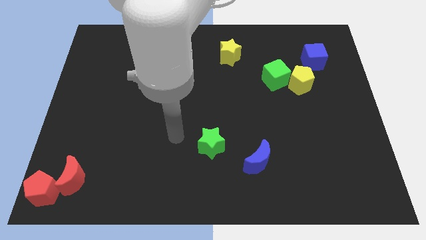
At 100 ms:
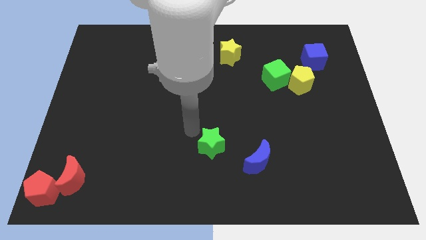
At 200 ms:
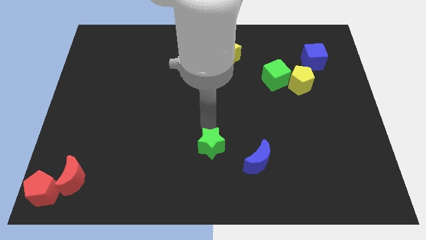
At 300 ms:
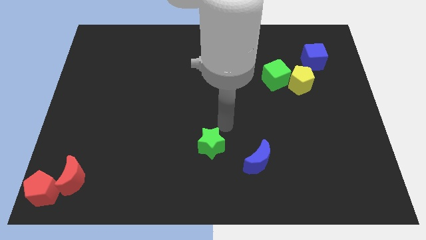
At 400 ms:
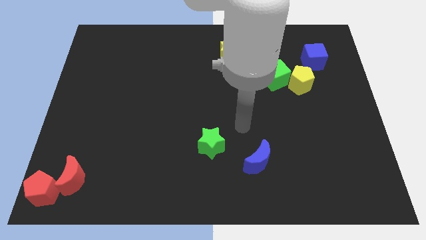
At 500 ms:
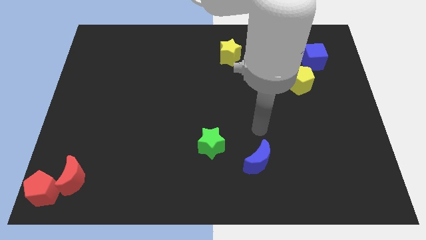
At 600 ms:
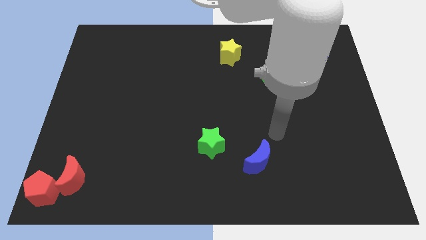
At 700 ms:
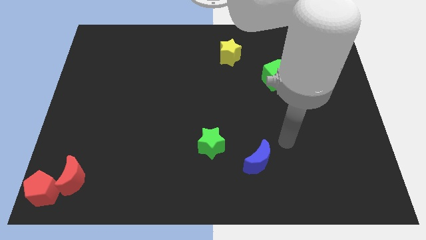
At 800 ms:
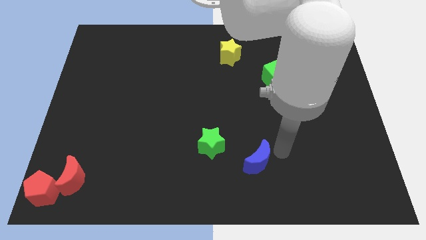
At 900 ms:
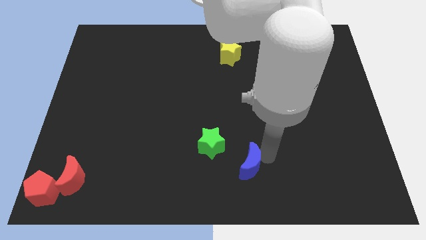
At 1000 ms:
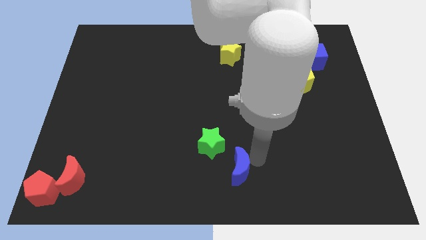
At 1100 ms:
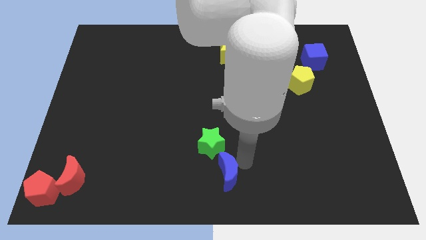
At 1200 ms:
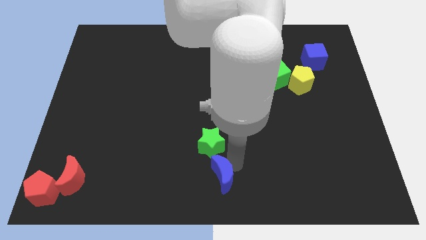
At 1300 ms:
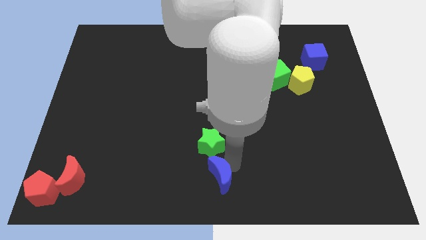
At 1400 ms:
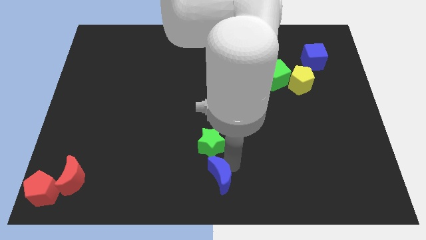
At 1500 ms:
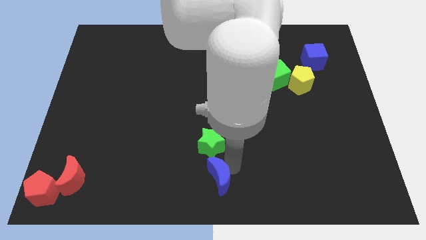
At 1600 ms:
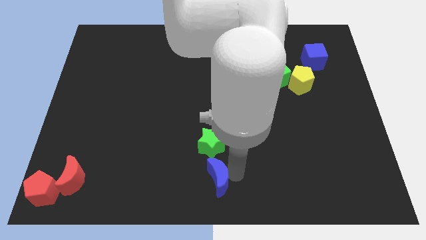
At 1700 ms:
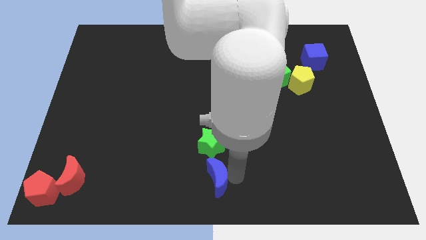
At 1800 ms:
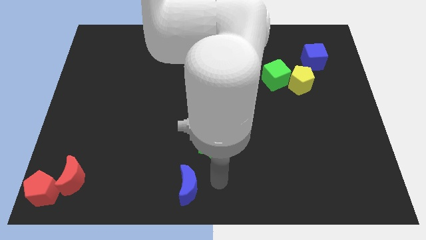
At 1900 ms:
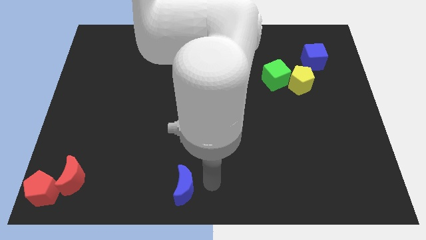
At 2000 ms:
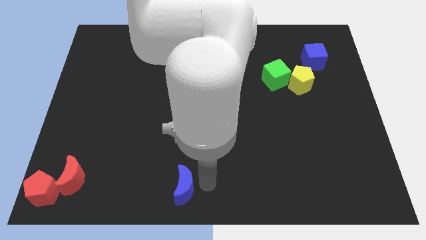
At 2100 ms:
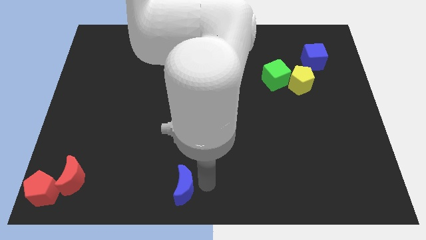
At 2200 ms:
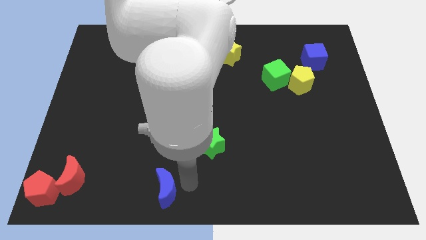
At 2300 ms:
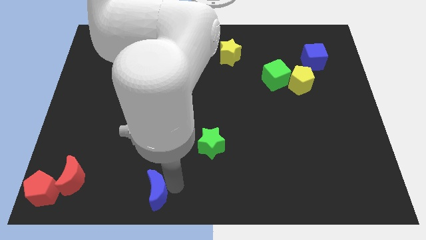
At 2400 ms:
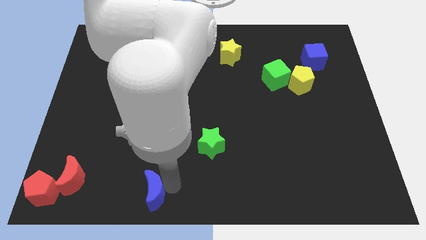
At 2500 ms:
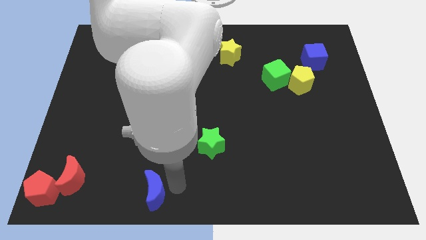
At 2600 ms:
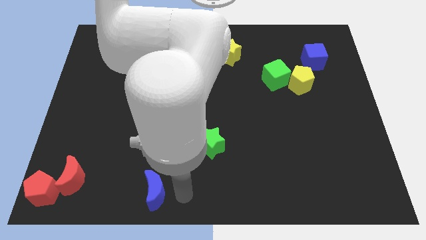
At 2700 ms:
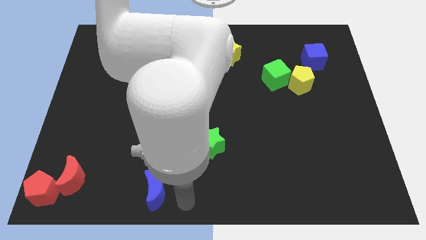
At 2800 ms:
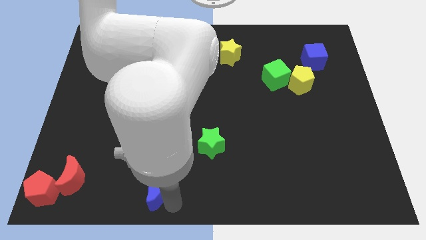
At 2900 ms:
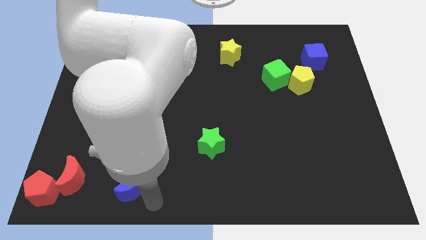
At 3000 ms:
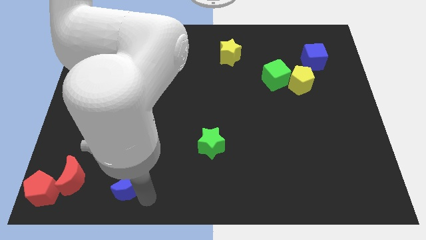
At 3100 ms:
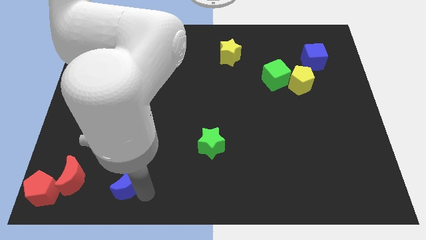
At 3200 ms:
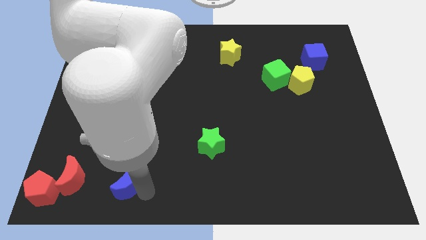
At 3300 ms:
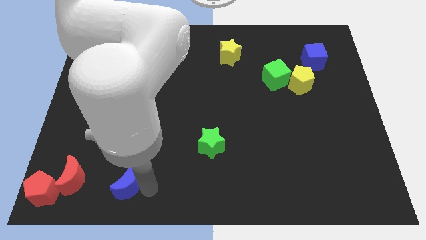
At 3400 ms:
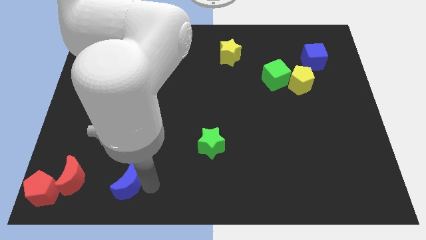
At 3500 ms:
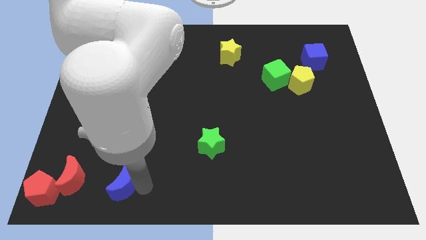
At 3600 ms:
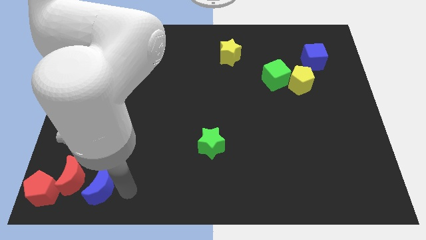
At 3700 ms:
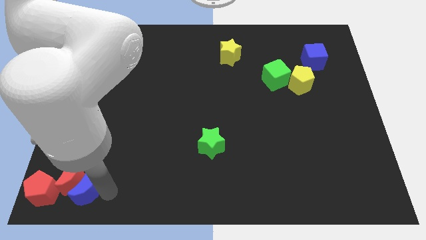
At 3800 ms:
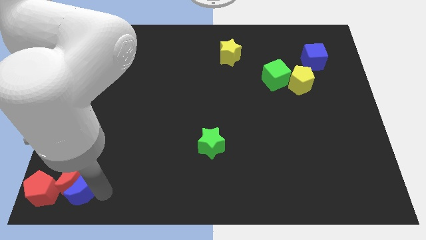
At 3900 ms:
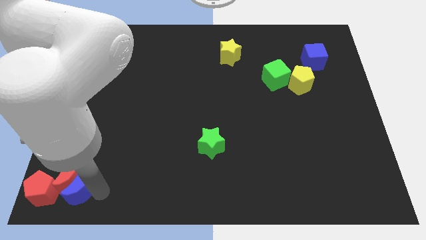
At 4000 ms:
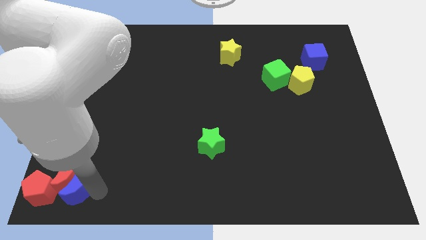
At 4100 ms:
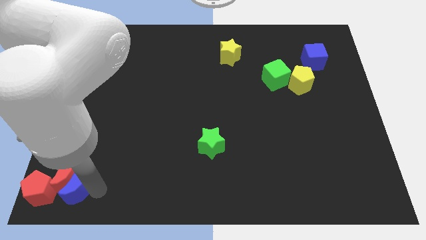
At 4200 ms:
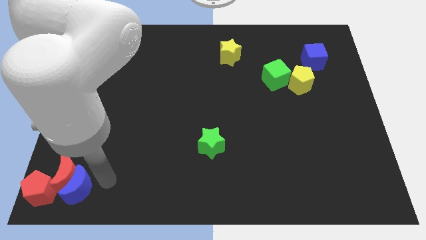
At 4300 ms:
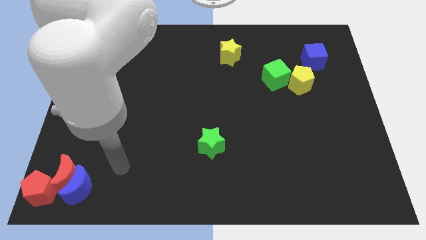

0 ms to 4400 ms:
push the blue crescent into the red crescent

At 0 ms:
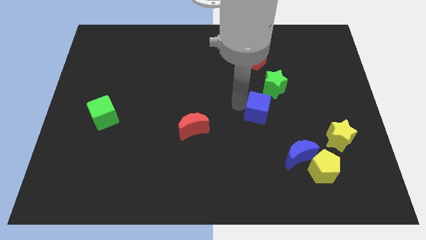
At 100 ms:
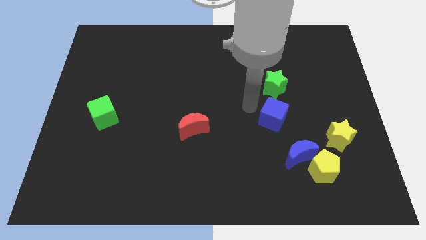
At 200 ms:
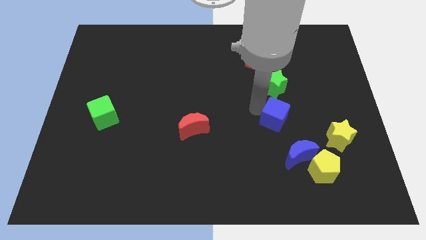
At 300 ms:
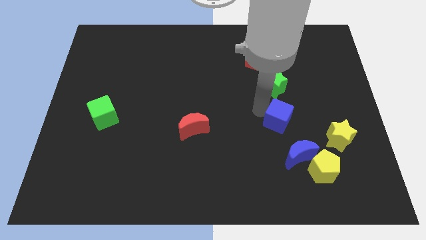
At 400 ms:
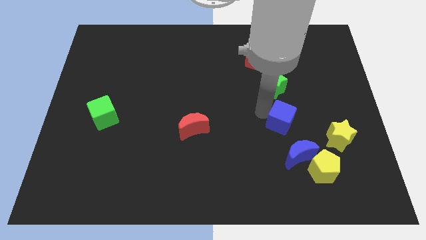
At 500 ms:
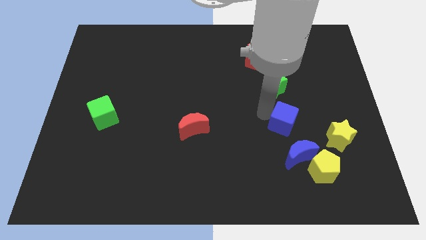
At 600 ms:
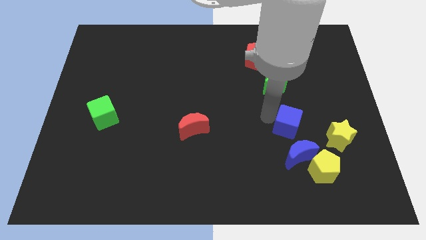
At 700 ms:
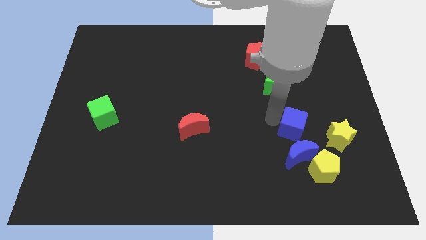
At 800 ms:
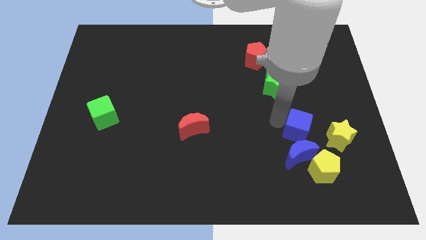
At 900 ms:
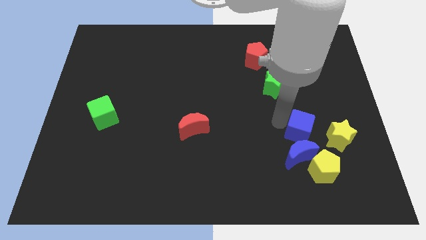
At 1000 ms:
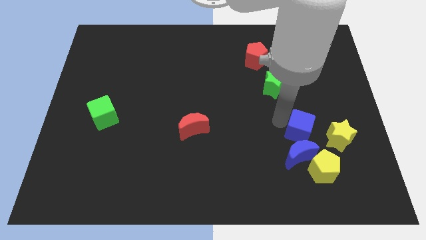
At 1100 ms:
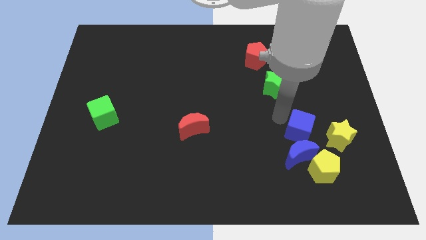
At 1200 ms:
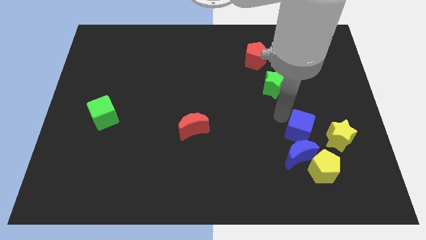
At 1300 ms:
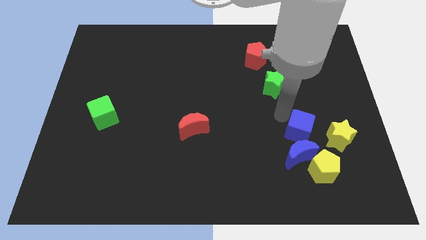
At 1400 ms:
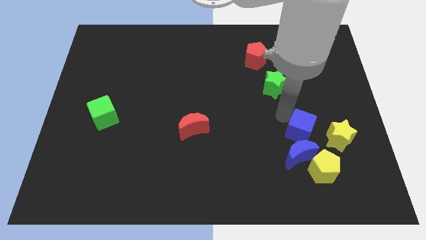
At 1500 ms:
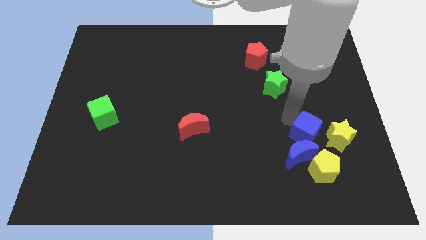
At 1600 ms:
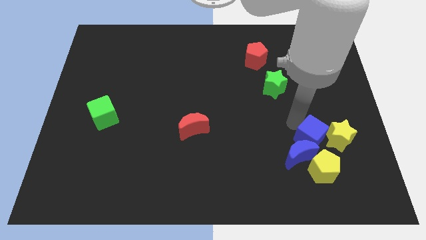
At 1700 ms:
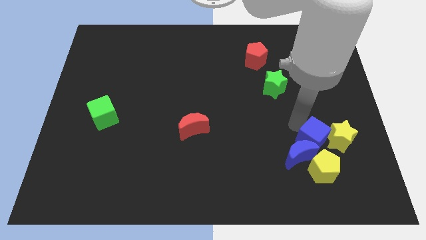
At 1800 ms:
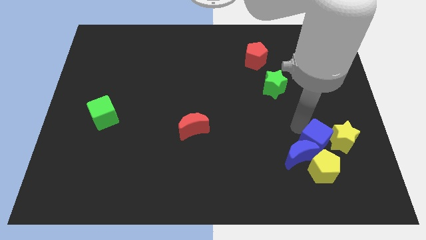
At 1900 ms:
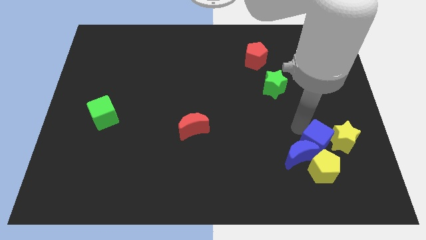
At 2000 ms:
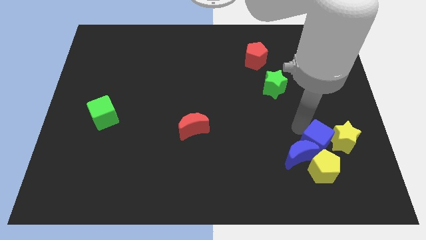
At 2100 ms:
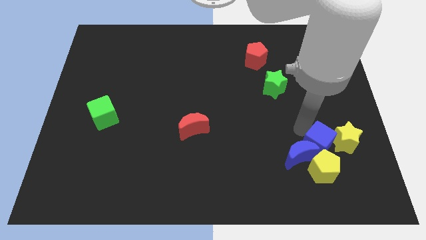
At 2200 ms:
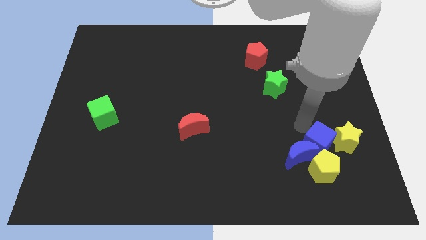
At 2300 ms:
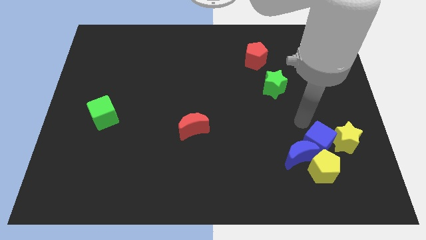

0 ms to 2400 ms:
push blue cube into the yellow star

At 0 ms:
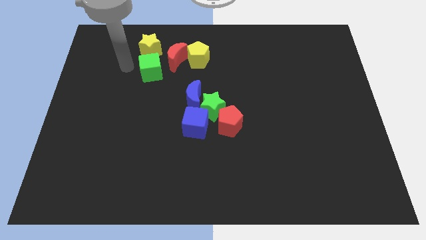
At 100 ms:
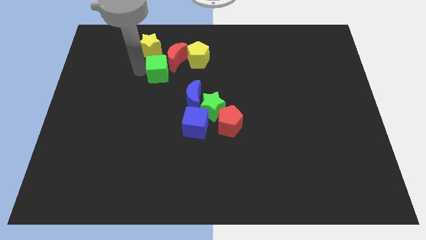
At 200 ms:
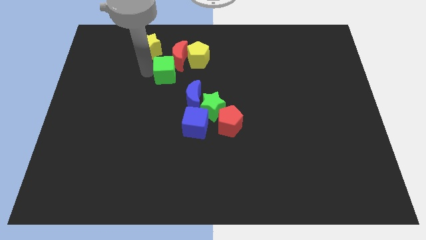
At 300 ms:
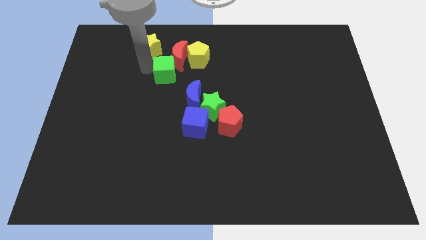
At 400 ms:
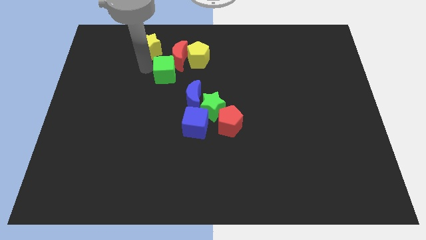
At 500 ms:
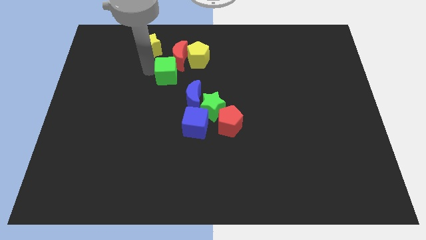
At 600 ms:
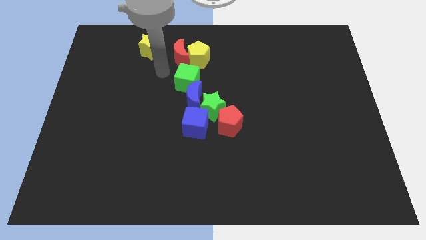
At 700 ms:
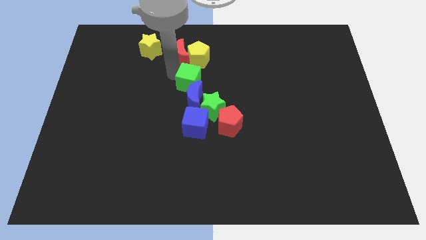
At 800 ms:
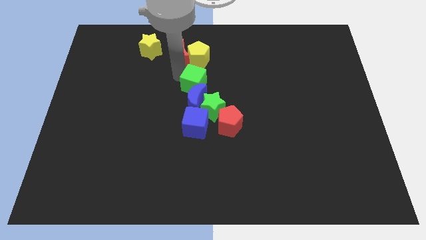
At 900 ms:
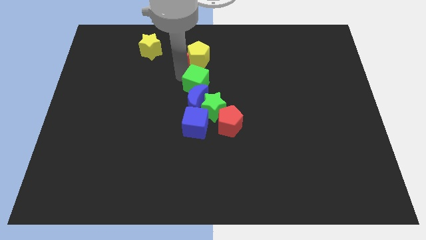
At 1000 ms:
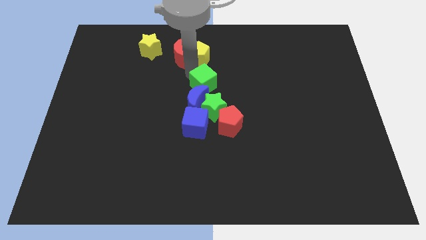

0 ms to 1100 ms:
push the green cube into the blue moon

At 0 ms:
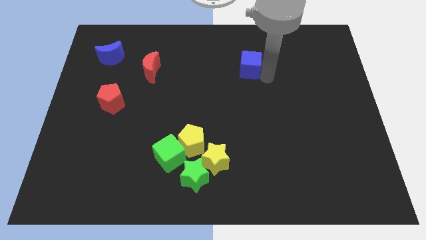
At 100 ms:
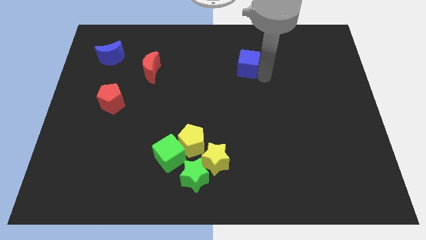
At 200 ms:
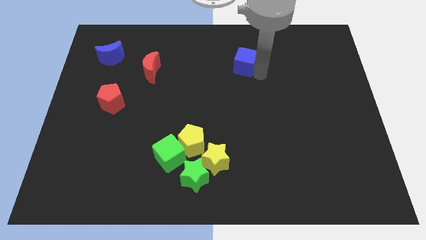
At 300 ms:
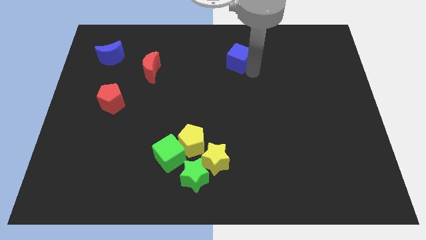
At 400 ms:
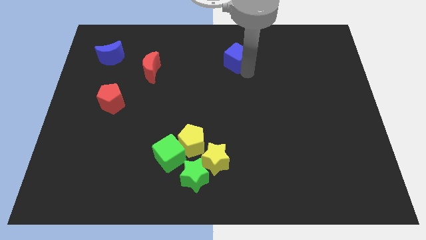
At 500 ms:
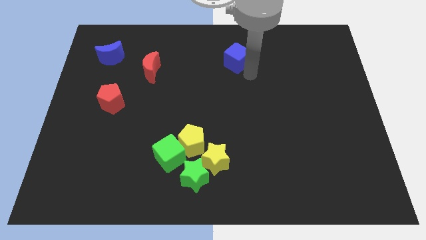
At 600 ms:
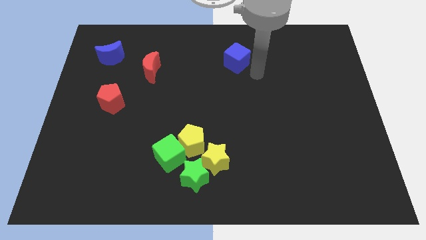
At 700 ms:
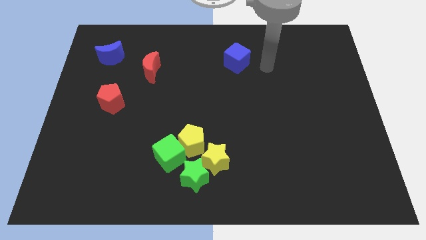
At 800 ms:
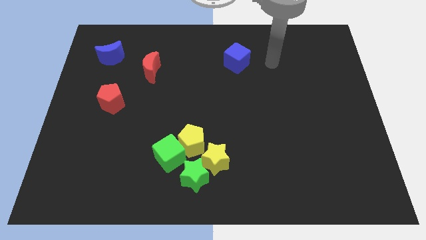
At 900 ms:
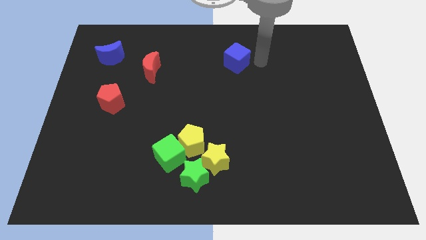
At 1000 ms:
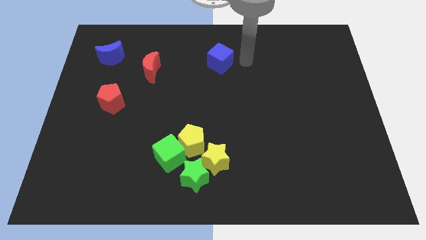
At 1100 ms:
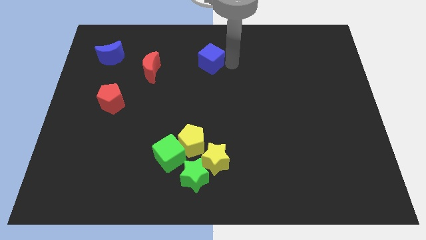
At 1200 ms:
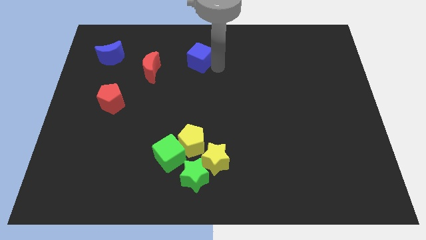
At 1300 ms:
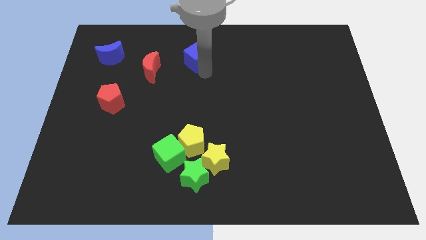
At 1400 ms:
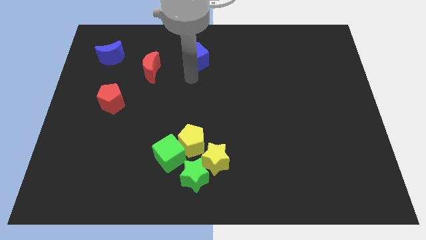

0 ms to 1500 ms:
put the blue cube vertically above the yellow pentagon
